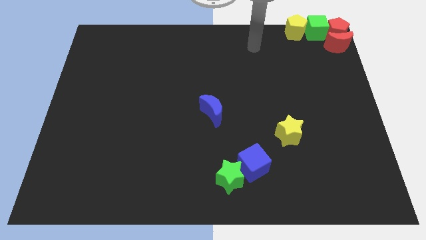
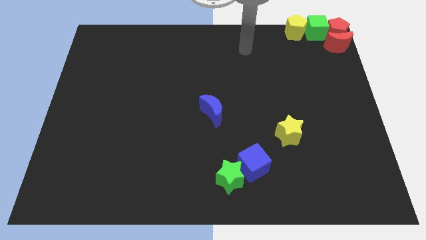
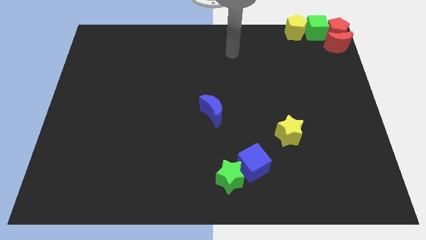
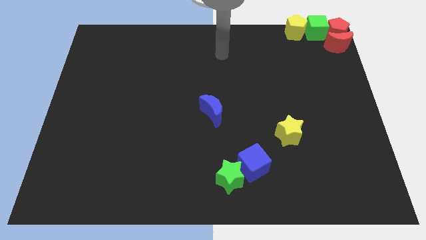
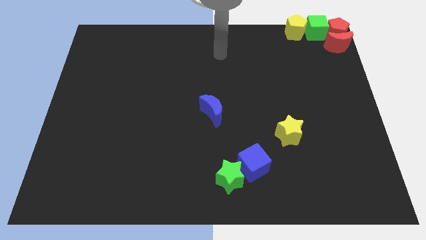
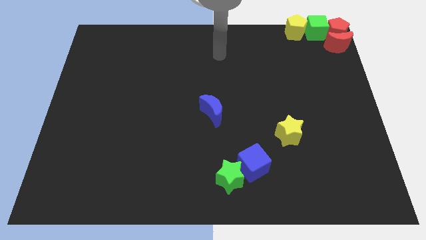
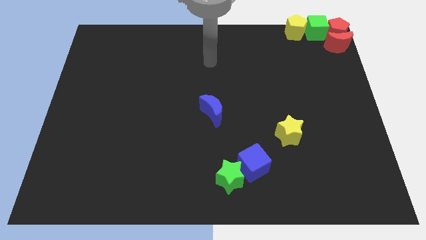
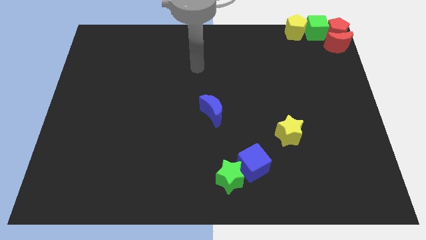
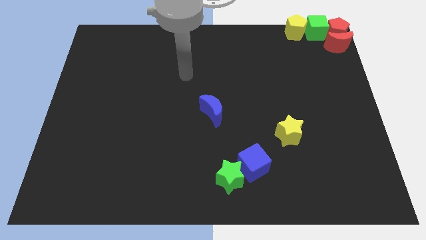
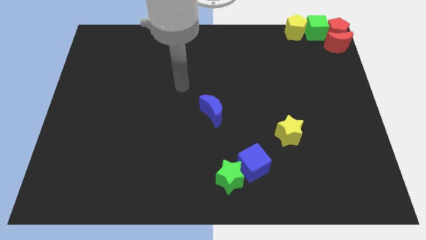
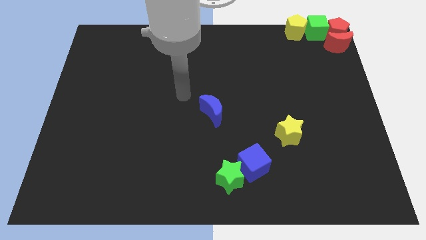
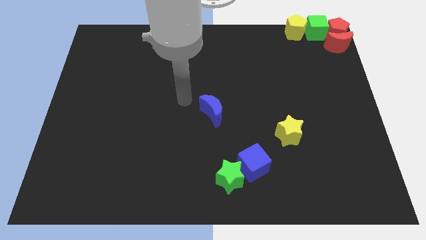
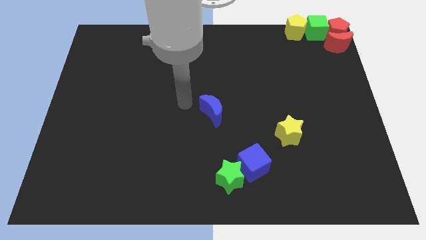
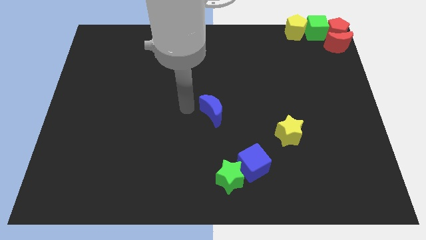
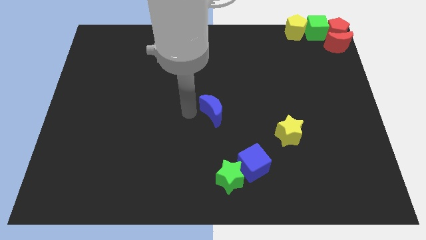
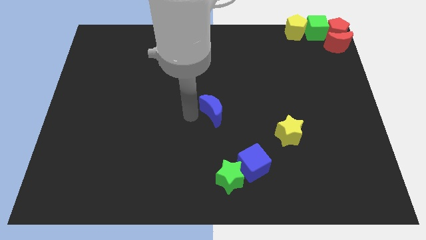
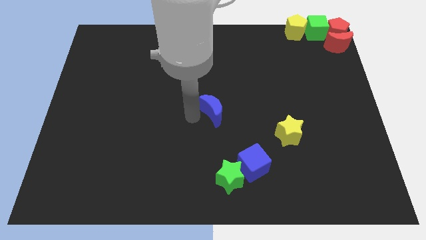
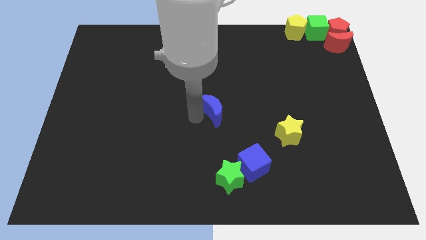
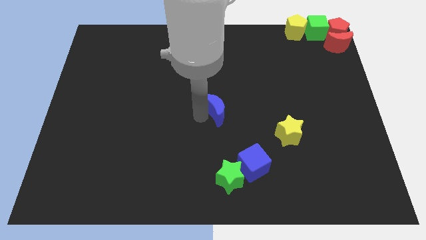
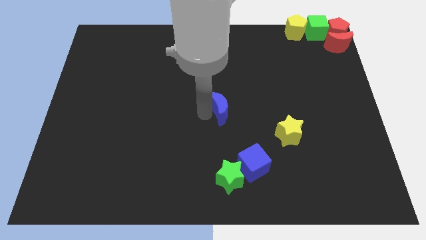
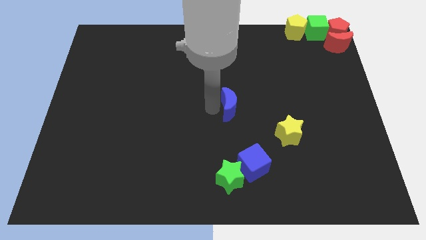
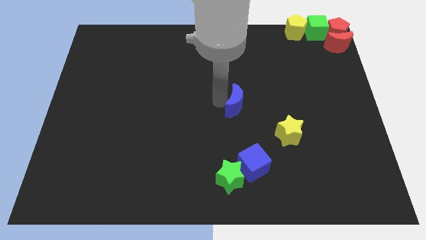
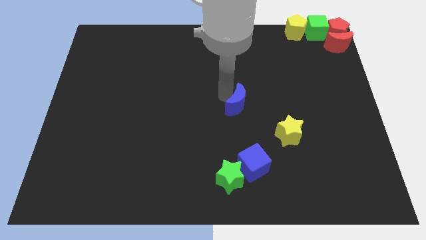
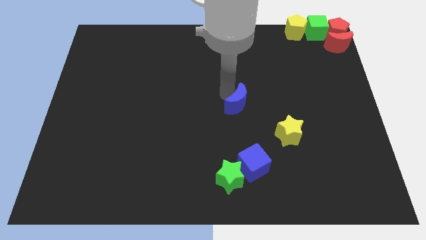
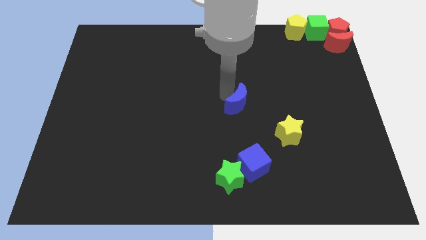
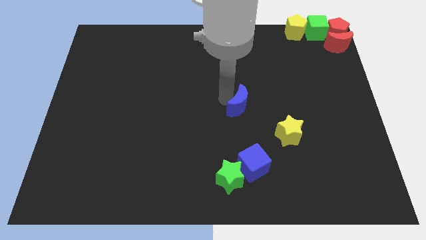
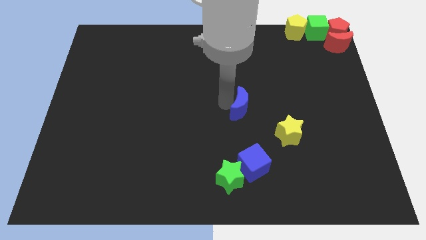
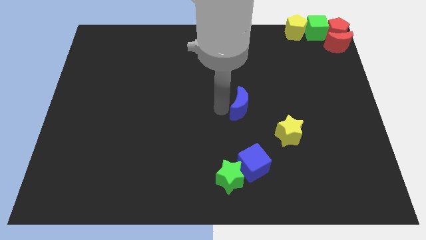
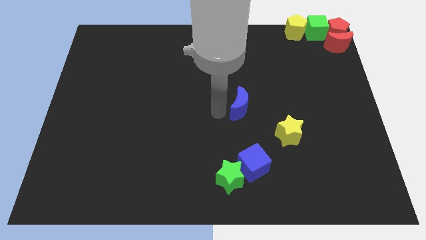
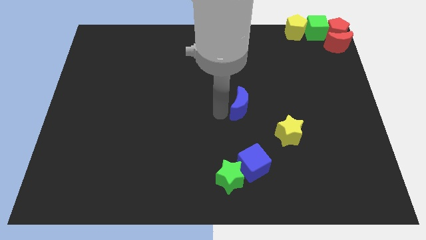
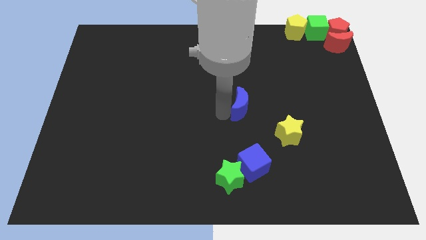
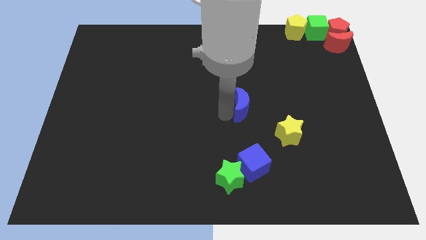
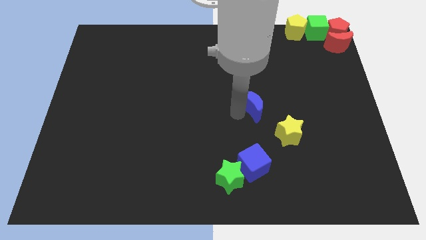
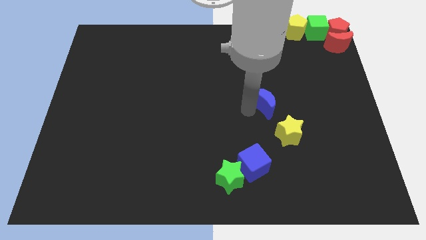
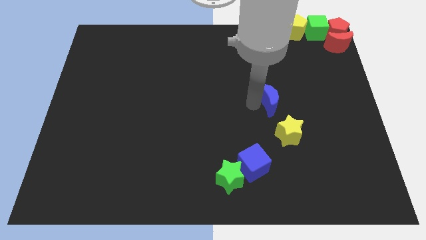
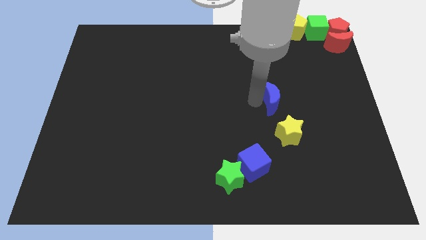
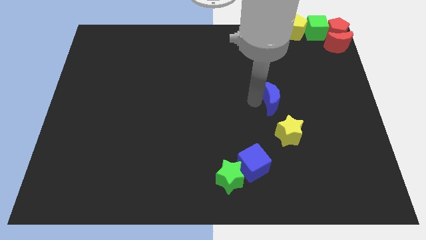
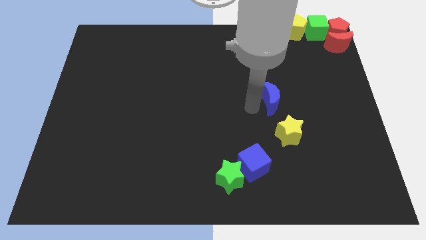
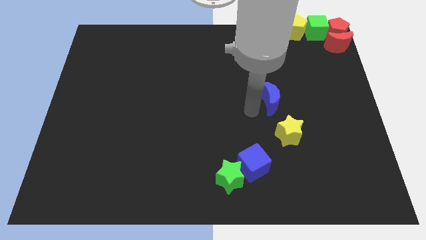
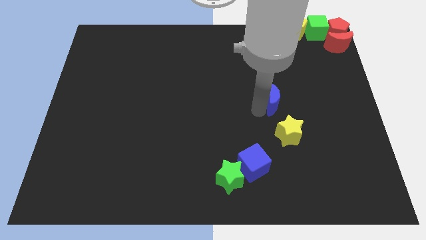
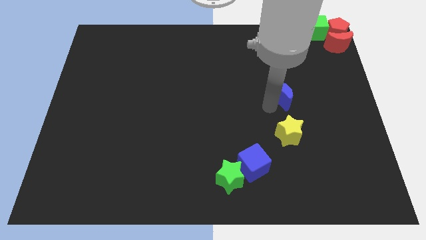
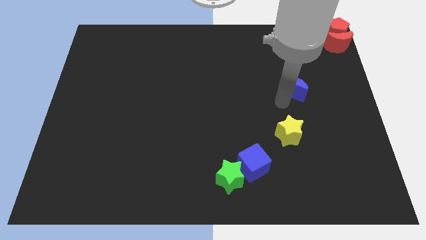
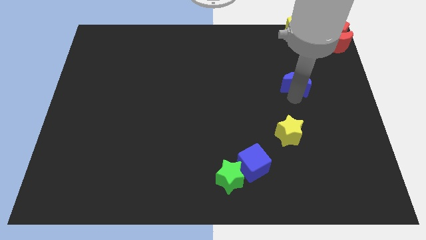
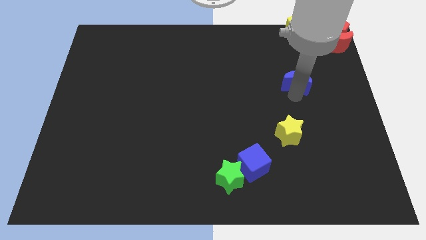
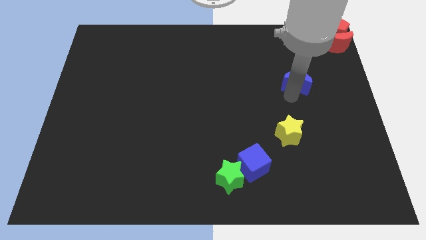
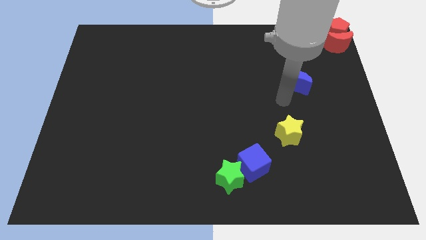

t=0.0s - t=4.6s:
push the blue crescent slightly towards the top right corner of the board

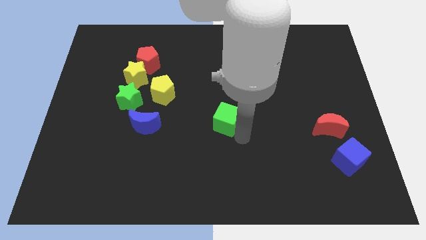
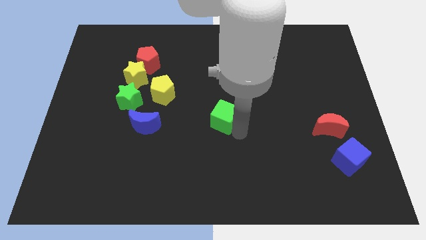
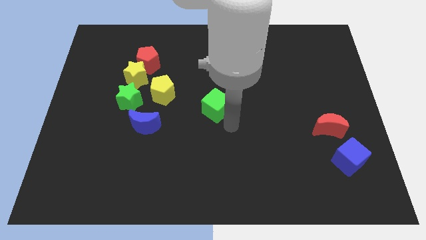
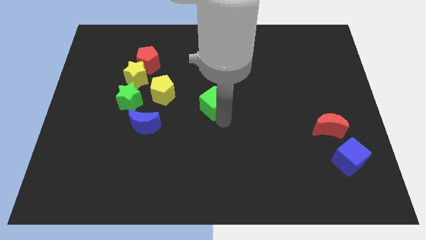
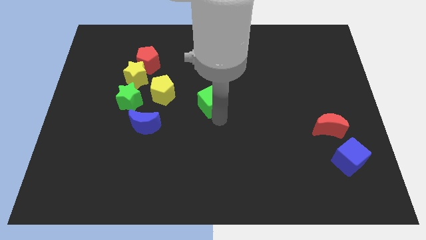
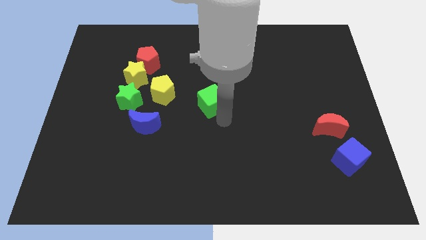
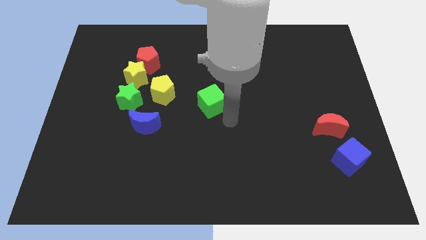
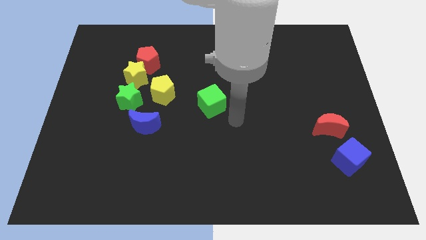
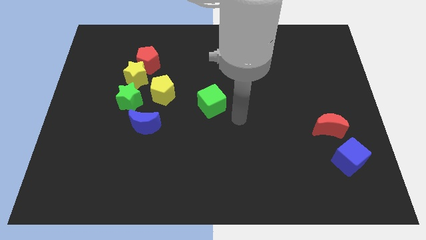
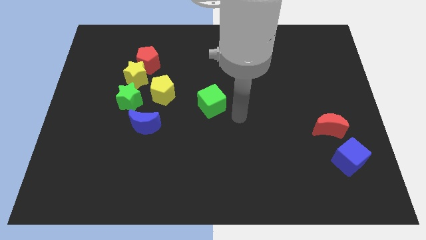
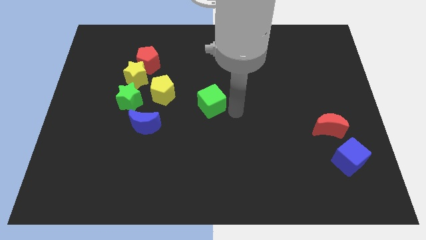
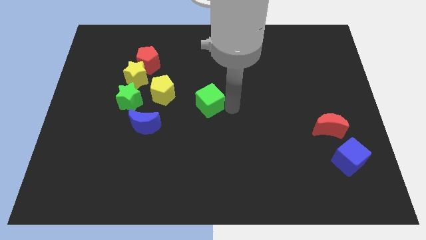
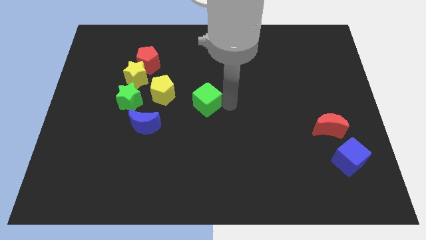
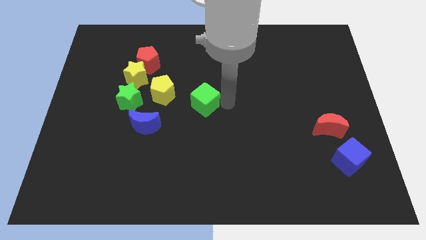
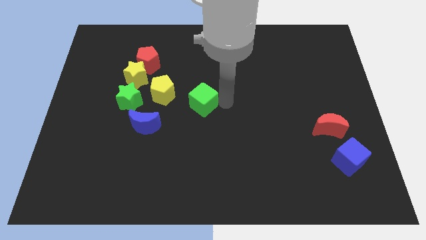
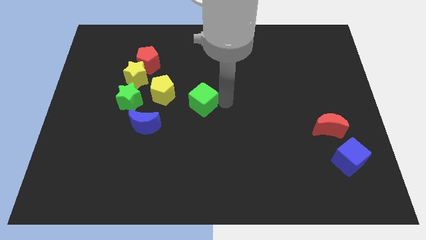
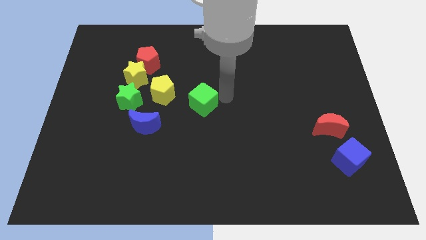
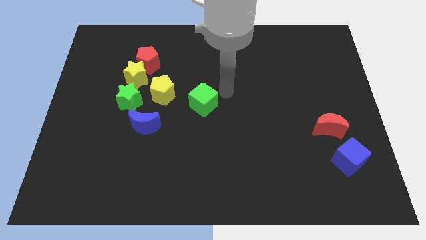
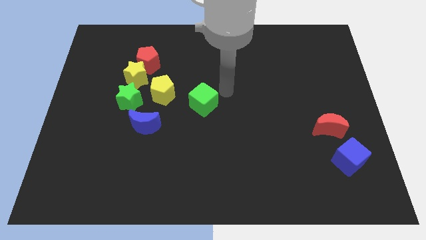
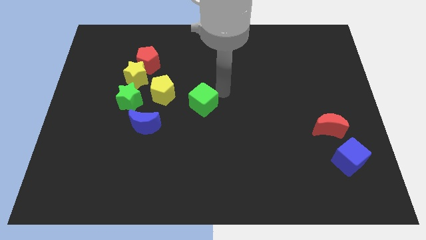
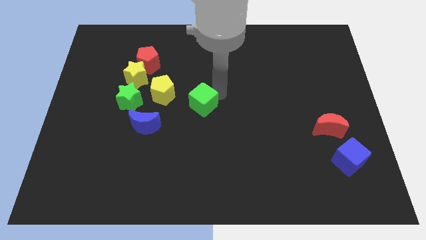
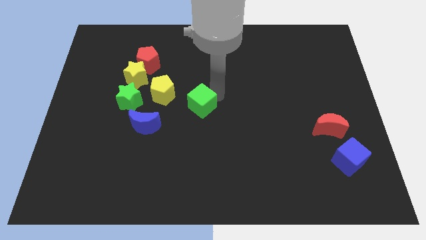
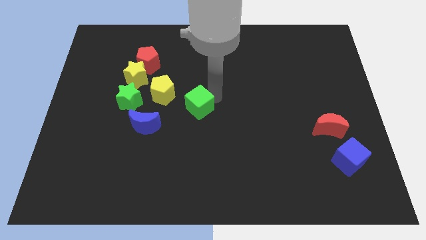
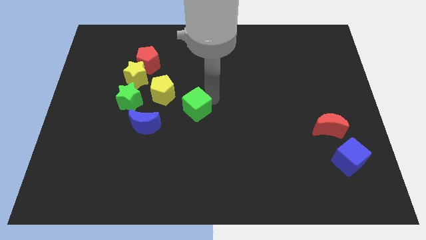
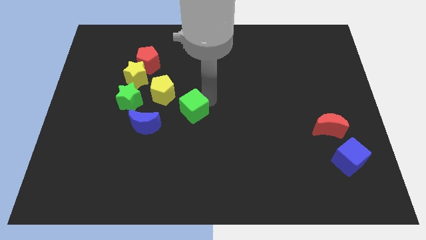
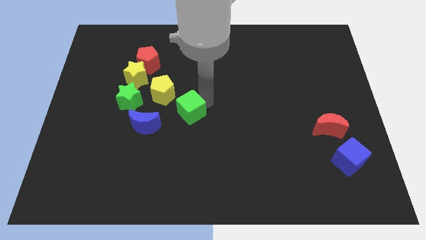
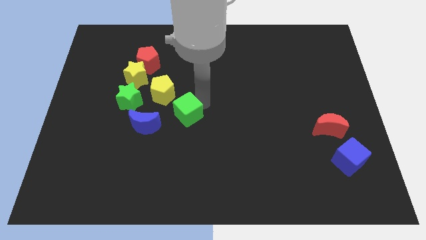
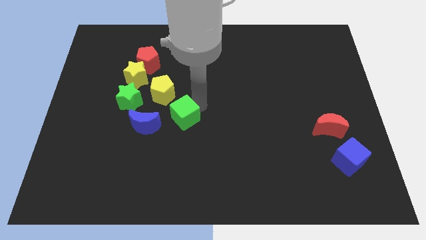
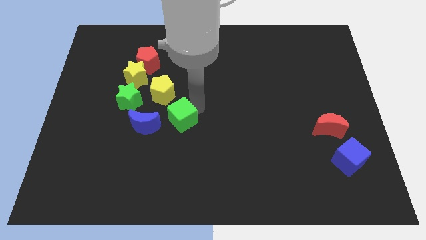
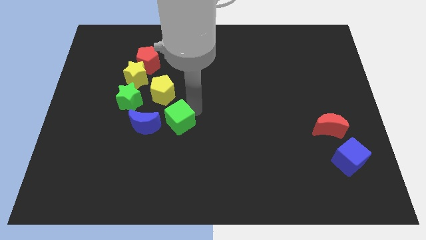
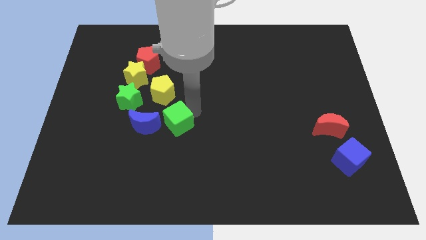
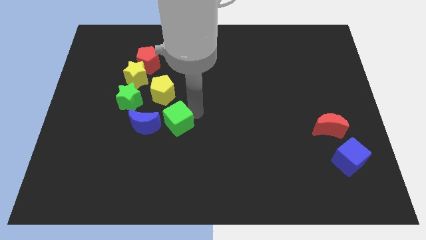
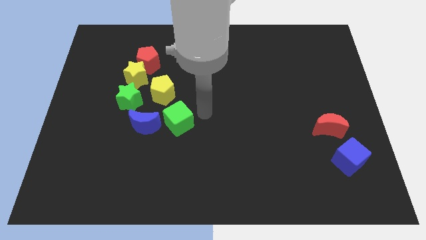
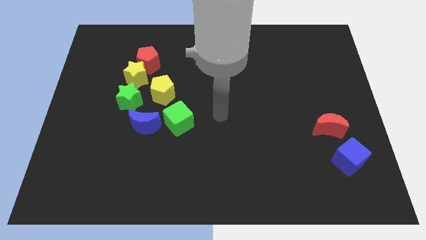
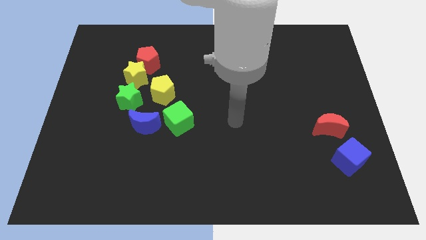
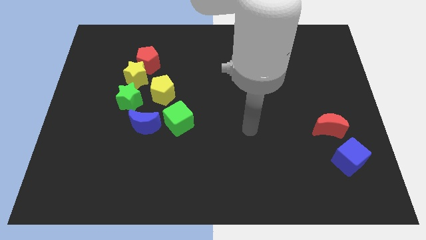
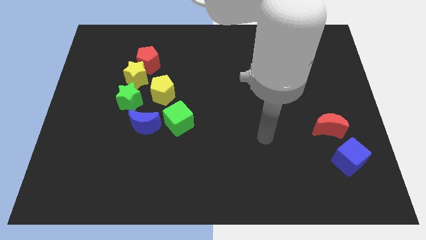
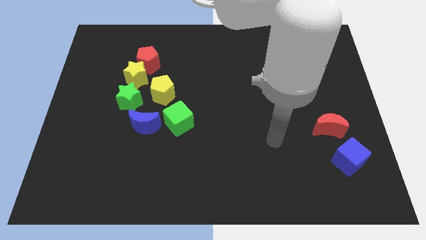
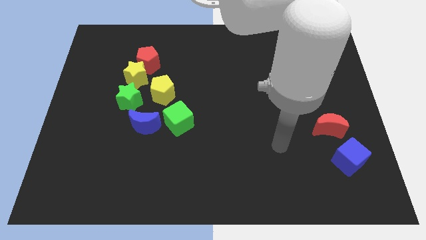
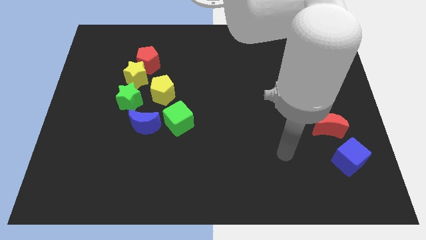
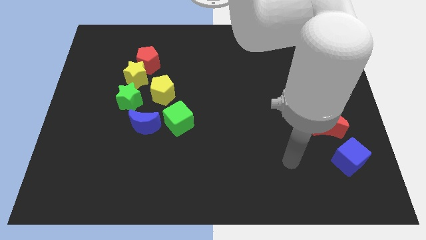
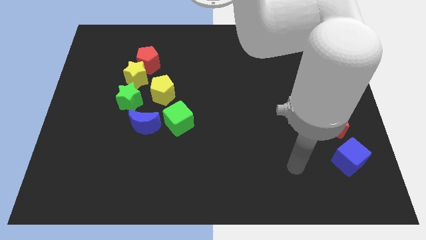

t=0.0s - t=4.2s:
place the green cube diagonally bottom right to the yellow pentagon

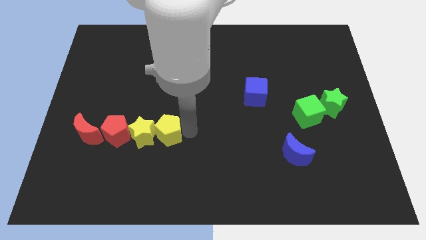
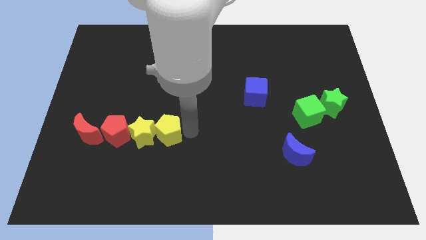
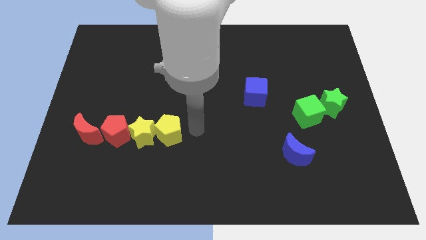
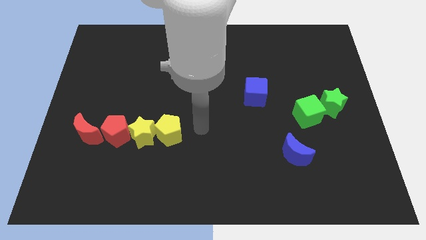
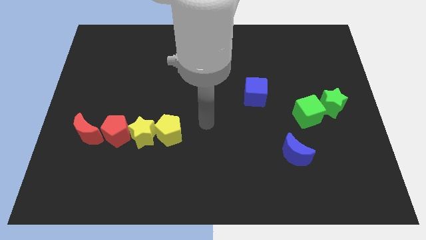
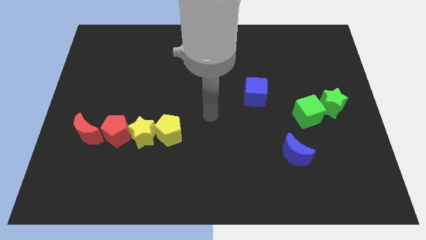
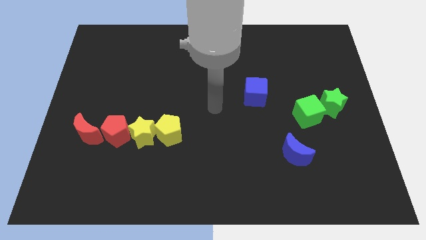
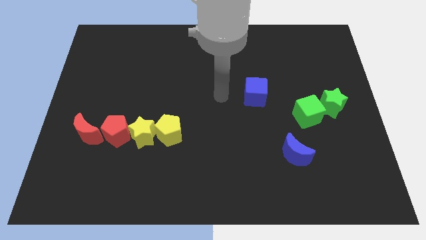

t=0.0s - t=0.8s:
move arm in center
